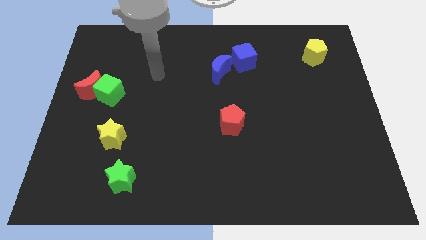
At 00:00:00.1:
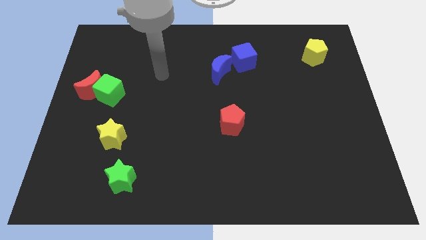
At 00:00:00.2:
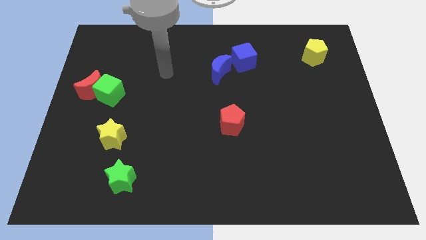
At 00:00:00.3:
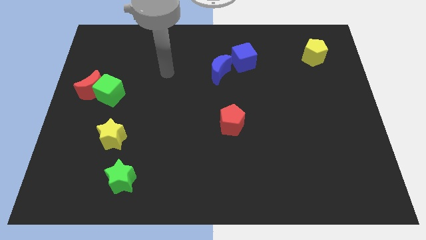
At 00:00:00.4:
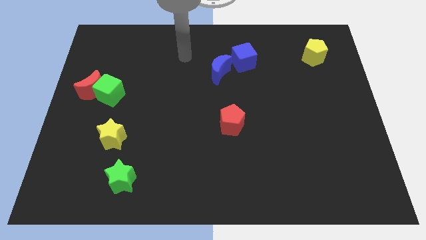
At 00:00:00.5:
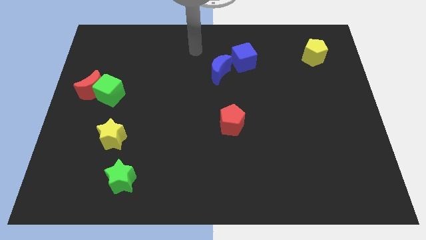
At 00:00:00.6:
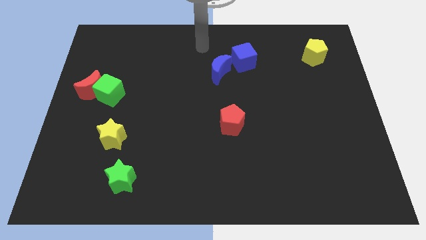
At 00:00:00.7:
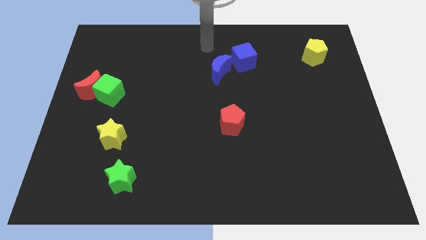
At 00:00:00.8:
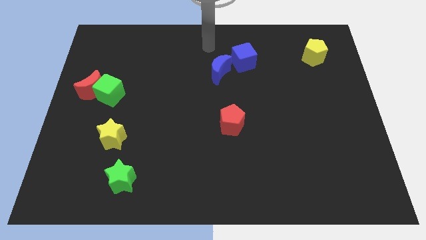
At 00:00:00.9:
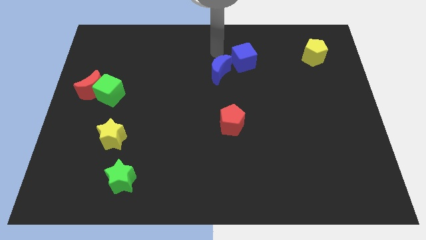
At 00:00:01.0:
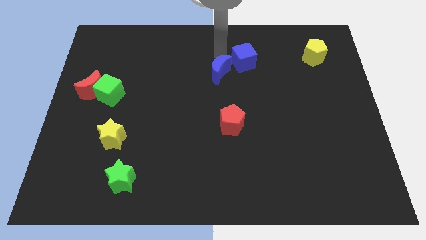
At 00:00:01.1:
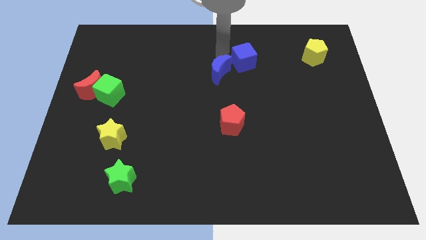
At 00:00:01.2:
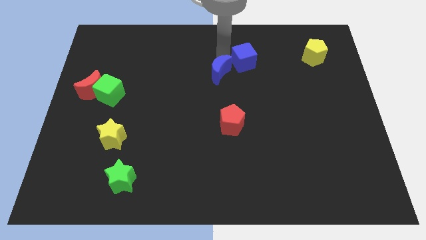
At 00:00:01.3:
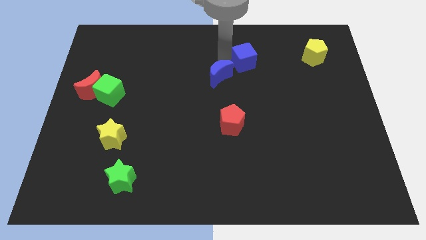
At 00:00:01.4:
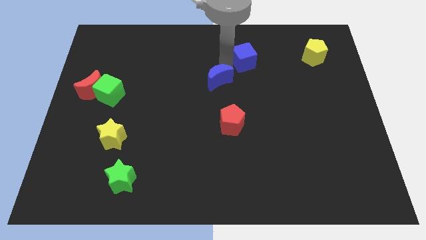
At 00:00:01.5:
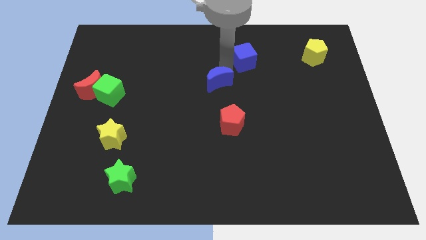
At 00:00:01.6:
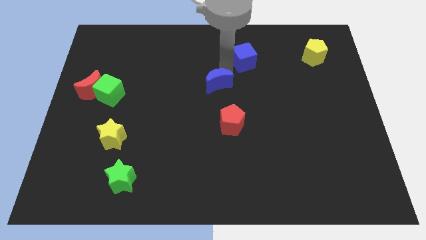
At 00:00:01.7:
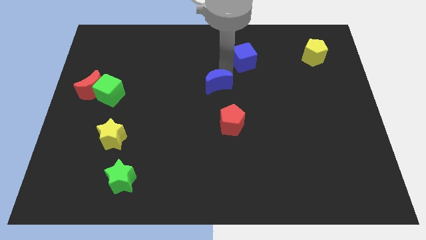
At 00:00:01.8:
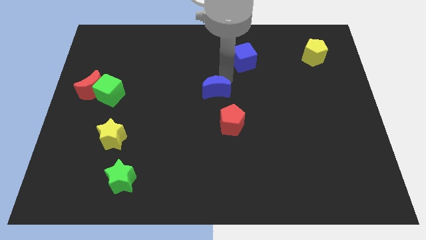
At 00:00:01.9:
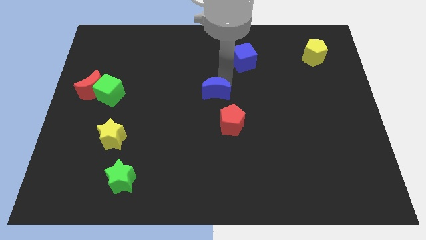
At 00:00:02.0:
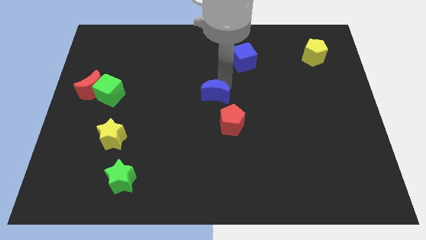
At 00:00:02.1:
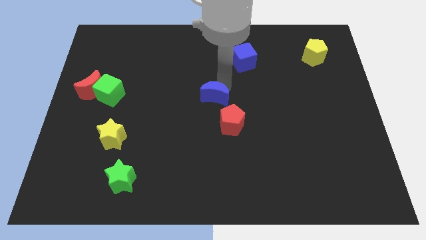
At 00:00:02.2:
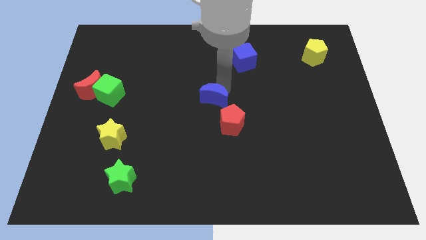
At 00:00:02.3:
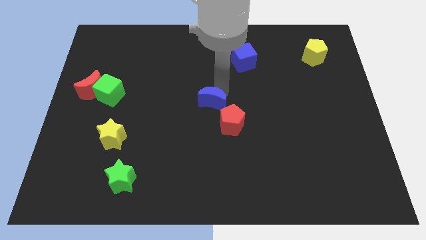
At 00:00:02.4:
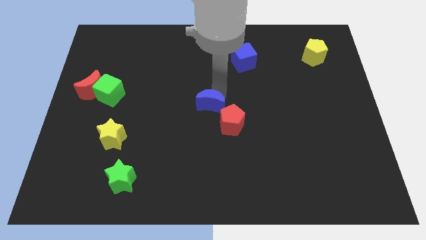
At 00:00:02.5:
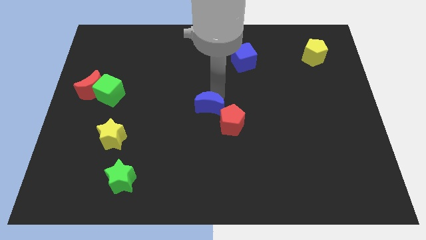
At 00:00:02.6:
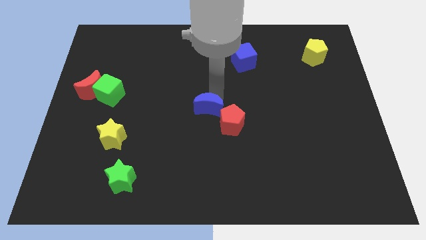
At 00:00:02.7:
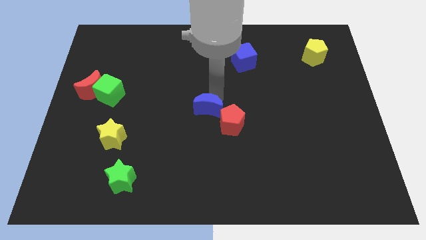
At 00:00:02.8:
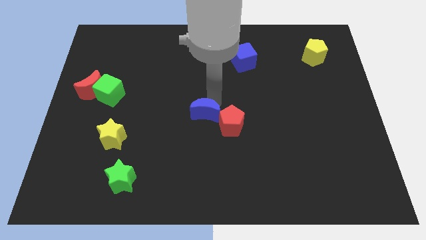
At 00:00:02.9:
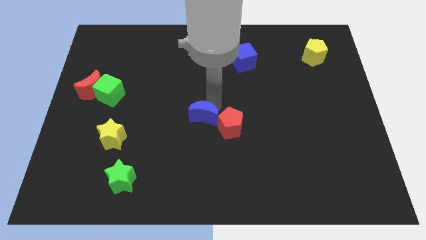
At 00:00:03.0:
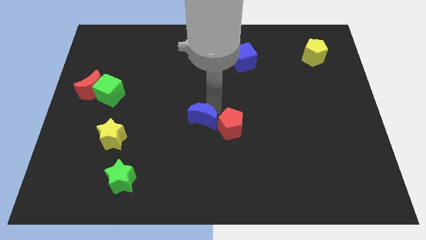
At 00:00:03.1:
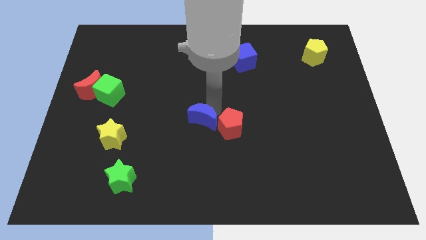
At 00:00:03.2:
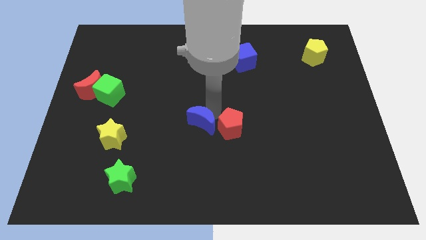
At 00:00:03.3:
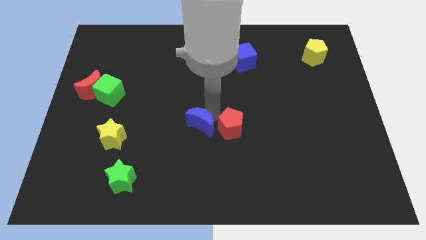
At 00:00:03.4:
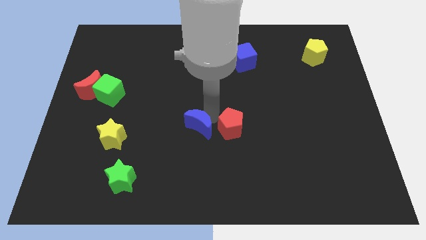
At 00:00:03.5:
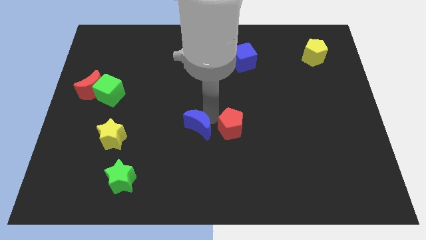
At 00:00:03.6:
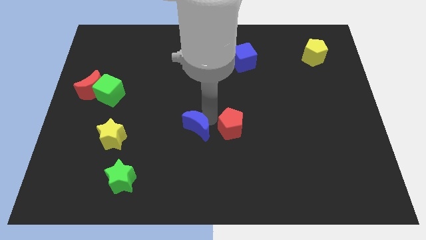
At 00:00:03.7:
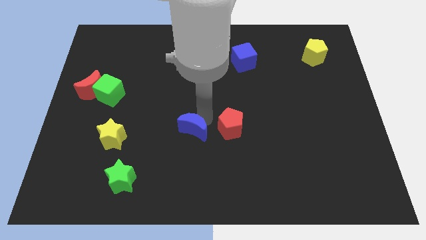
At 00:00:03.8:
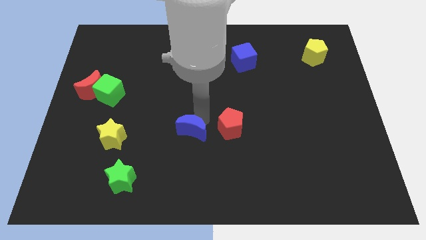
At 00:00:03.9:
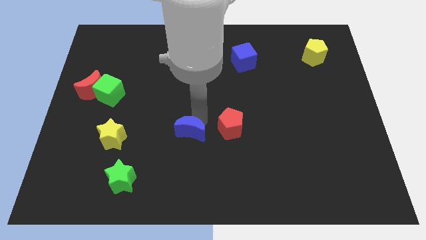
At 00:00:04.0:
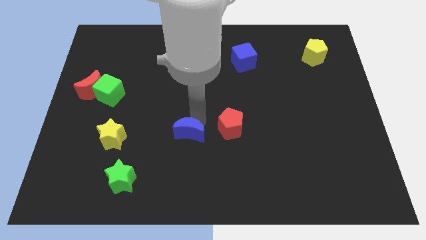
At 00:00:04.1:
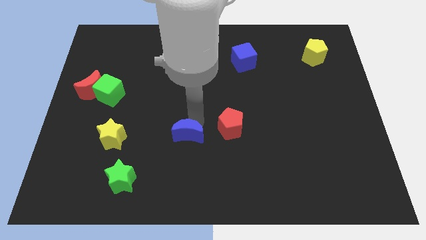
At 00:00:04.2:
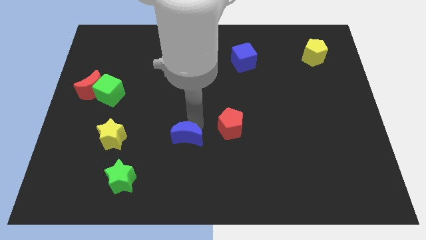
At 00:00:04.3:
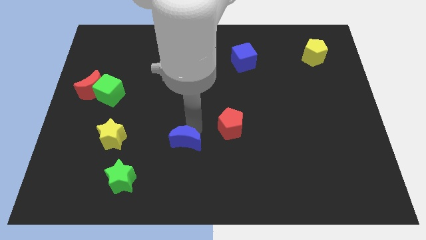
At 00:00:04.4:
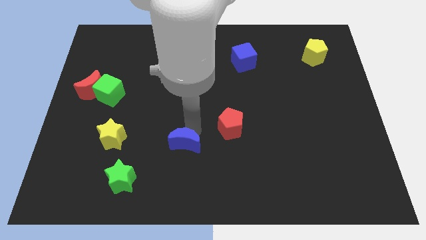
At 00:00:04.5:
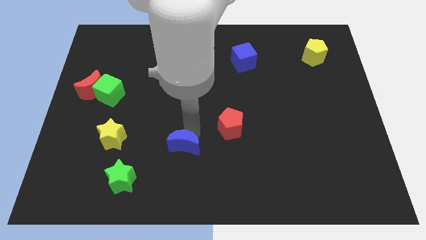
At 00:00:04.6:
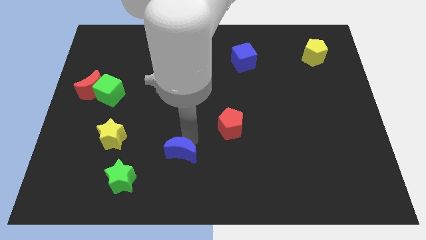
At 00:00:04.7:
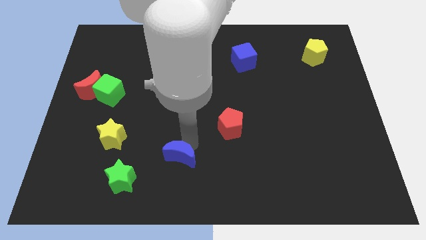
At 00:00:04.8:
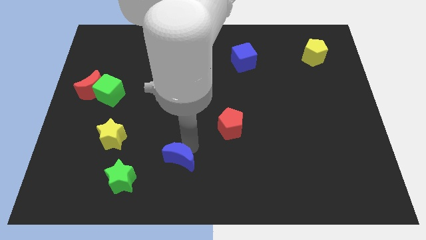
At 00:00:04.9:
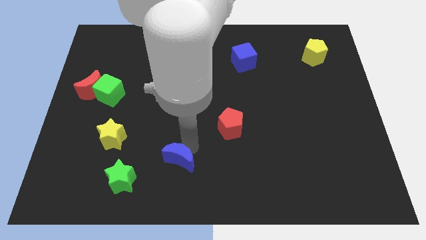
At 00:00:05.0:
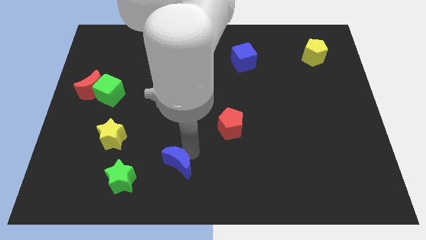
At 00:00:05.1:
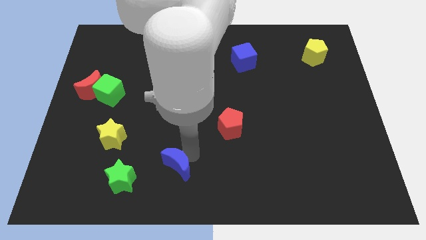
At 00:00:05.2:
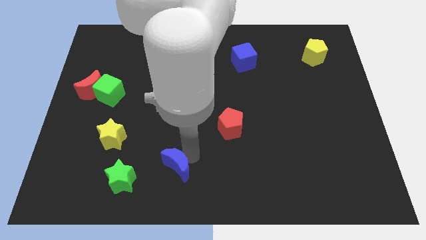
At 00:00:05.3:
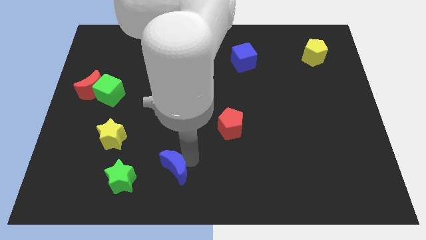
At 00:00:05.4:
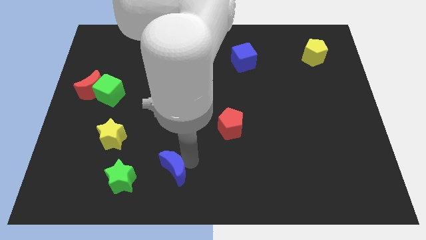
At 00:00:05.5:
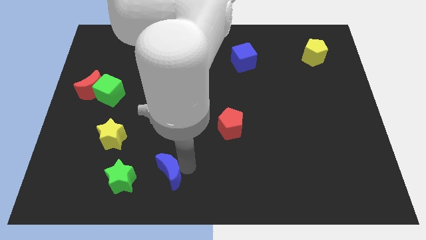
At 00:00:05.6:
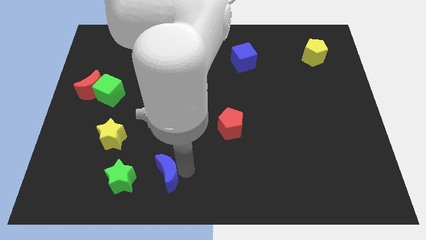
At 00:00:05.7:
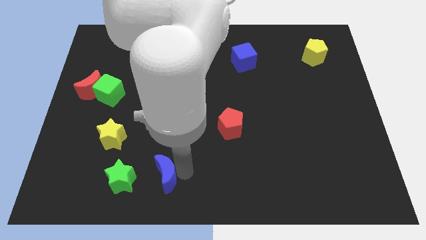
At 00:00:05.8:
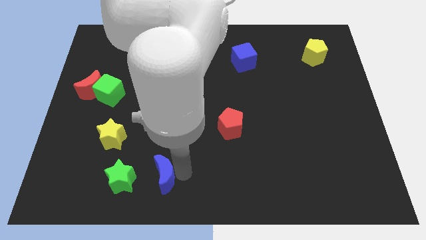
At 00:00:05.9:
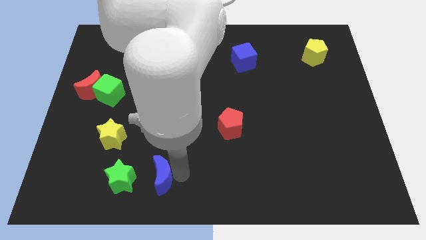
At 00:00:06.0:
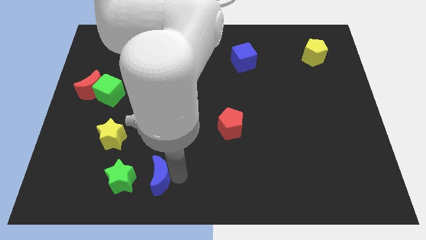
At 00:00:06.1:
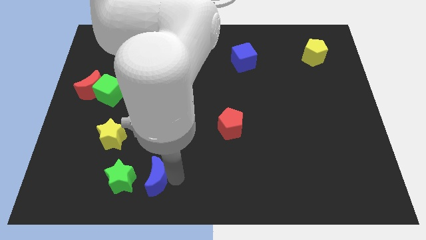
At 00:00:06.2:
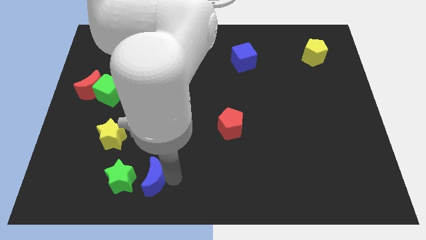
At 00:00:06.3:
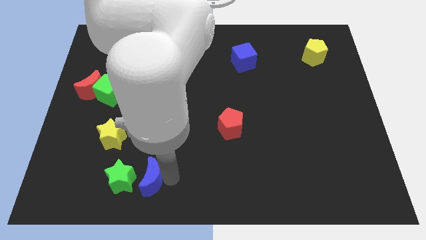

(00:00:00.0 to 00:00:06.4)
move the blue moon close to the green star

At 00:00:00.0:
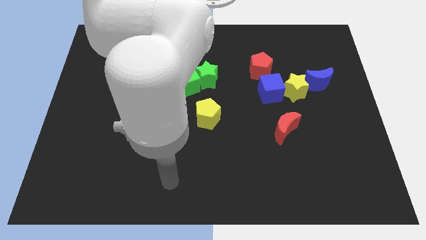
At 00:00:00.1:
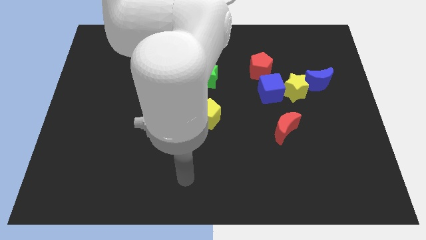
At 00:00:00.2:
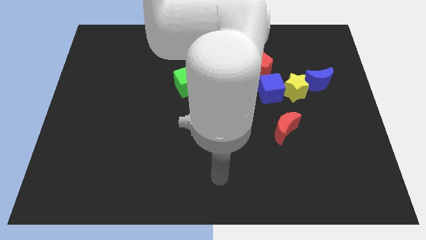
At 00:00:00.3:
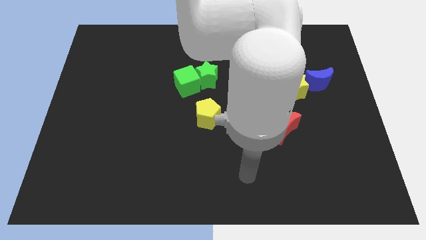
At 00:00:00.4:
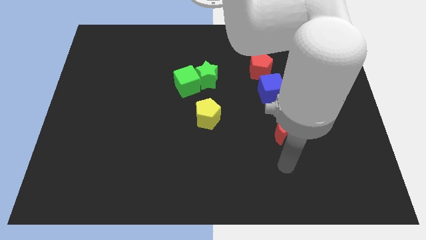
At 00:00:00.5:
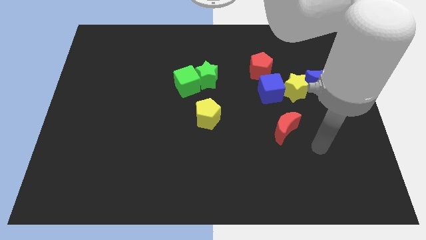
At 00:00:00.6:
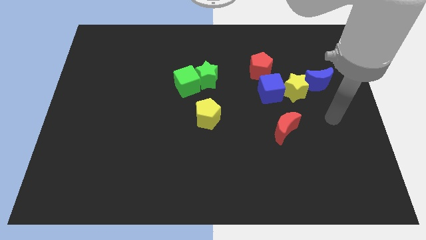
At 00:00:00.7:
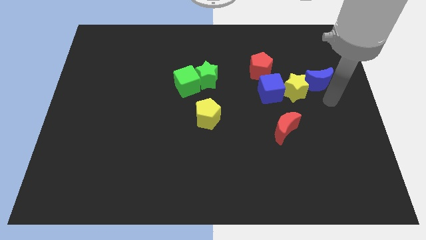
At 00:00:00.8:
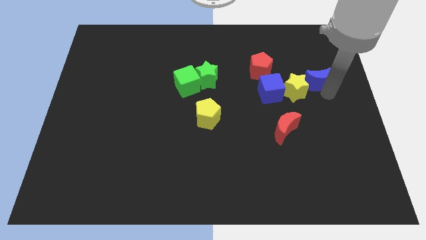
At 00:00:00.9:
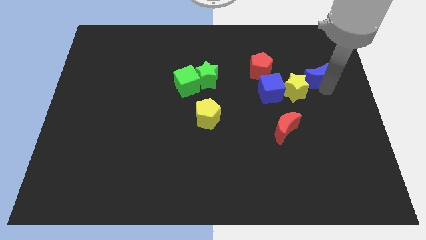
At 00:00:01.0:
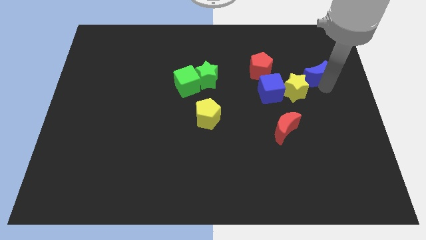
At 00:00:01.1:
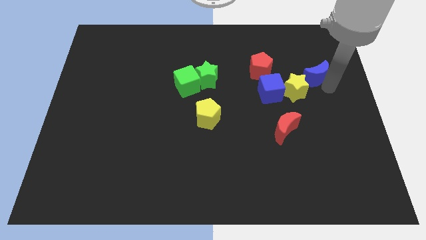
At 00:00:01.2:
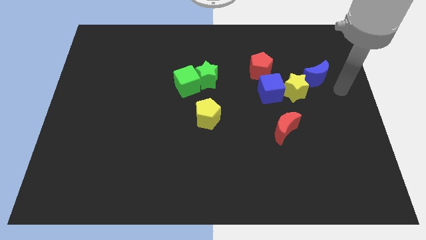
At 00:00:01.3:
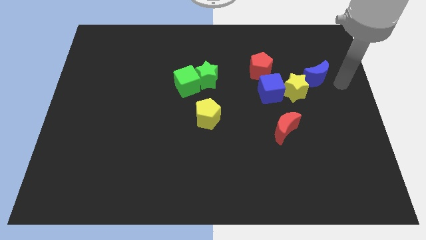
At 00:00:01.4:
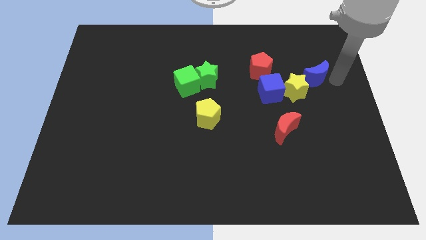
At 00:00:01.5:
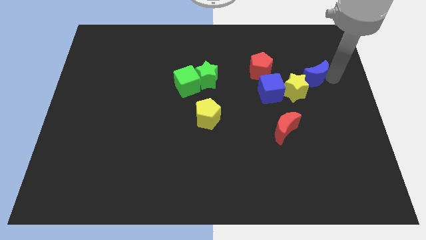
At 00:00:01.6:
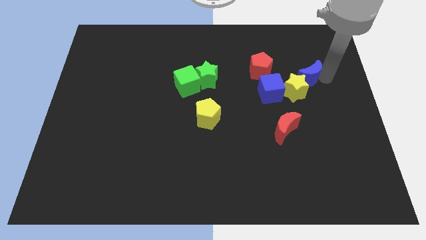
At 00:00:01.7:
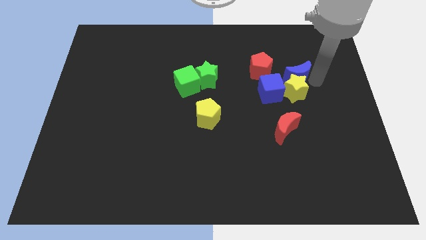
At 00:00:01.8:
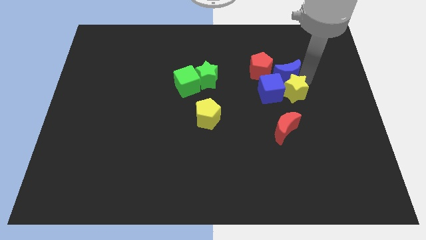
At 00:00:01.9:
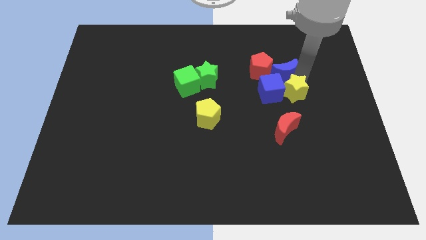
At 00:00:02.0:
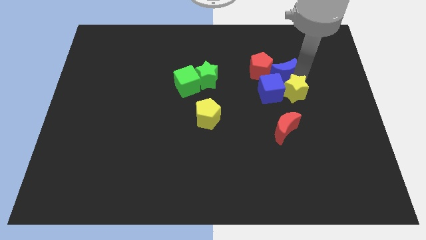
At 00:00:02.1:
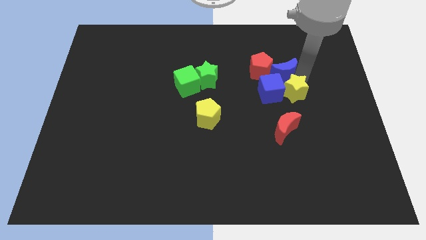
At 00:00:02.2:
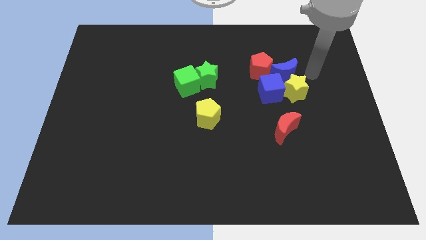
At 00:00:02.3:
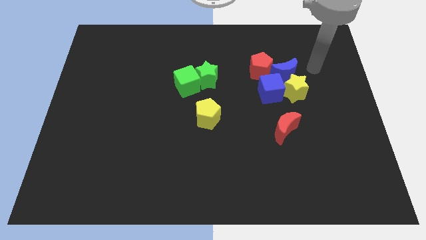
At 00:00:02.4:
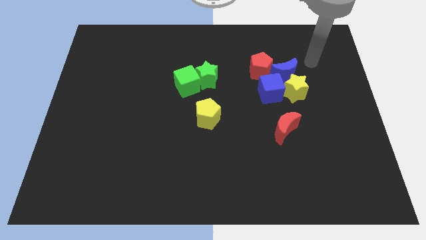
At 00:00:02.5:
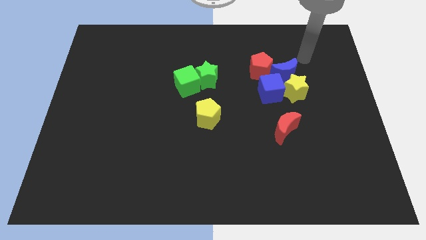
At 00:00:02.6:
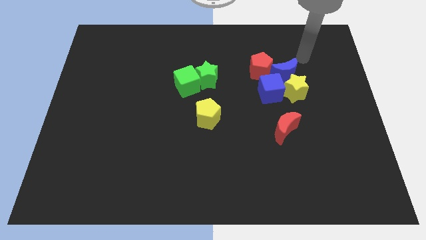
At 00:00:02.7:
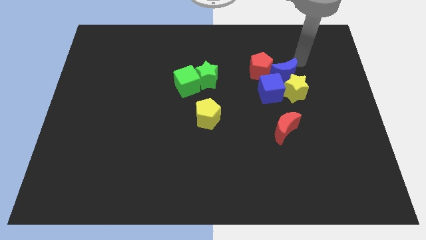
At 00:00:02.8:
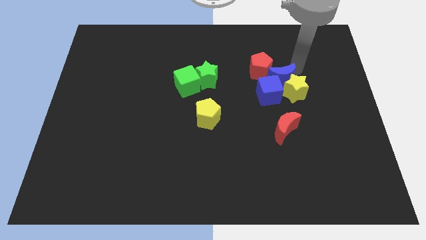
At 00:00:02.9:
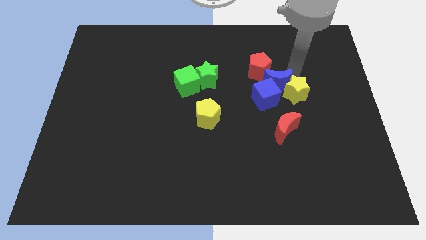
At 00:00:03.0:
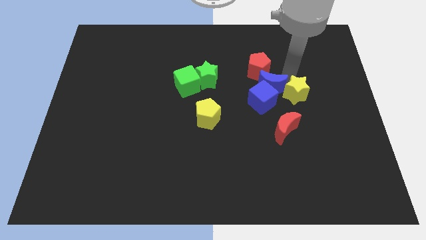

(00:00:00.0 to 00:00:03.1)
put the blue moon to the blue cube
